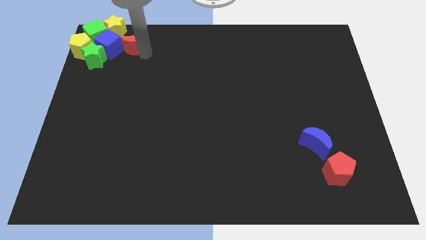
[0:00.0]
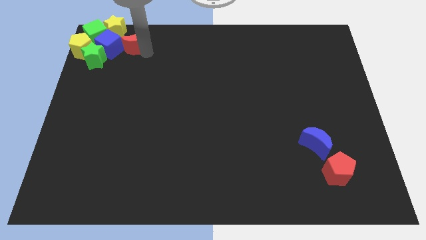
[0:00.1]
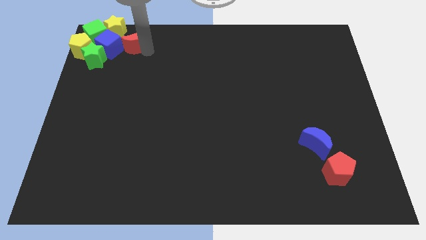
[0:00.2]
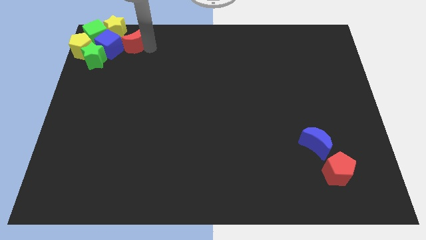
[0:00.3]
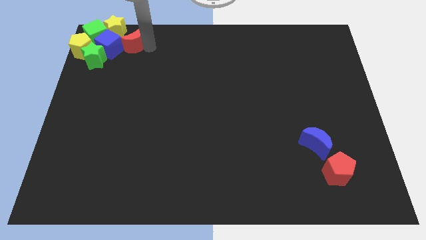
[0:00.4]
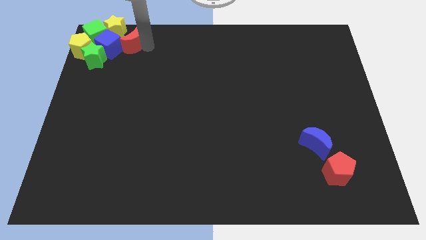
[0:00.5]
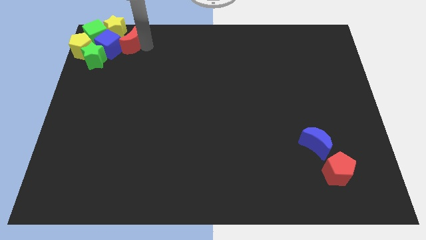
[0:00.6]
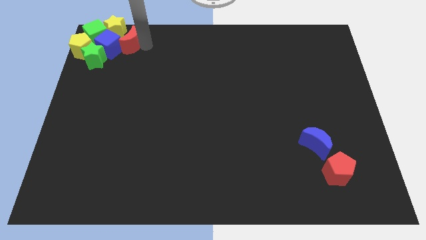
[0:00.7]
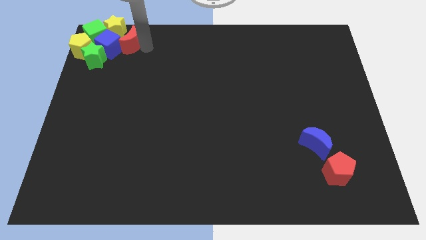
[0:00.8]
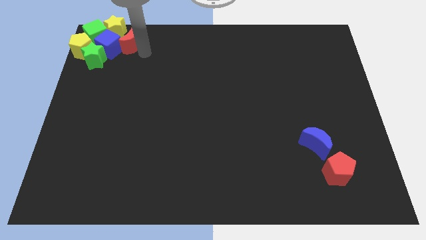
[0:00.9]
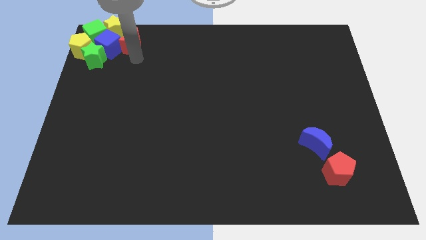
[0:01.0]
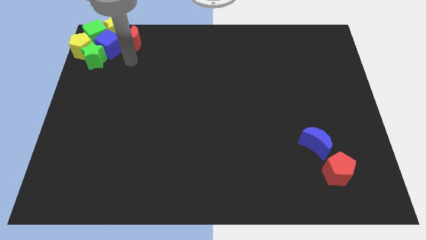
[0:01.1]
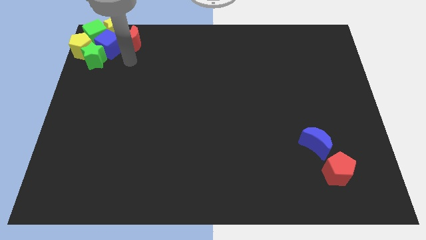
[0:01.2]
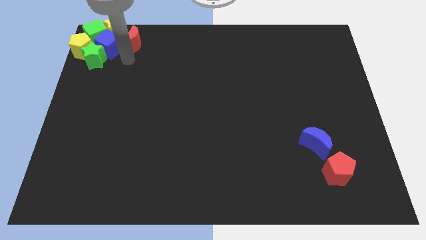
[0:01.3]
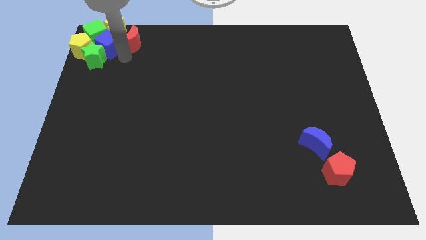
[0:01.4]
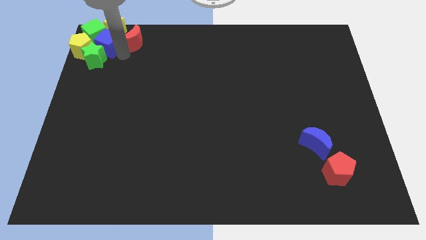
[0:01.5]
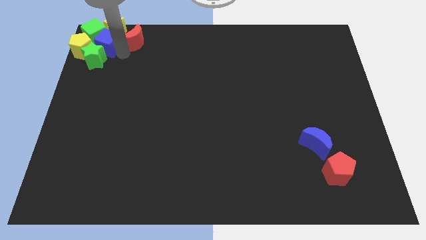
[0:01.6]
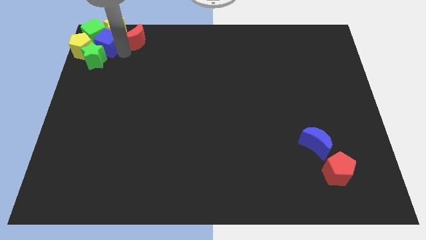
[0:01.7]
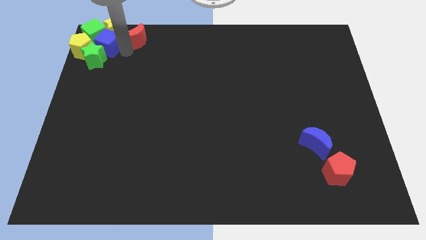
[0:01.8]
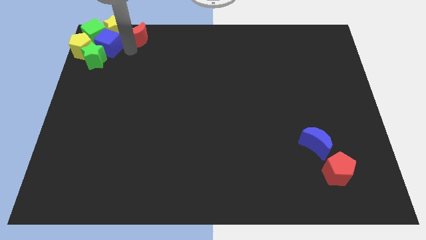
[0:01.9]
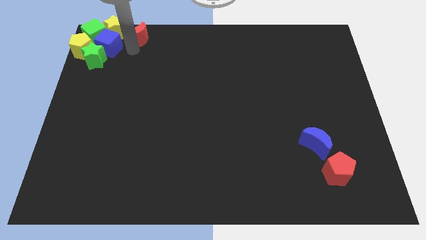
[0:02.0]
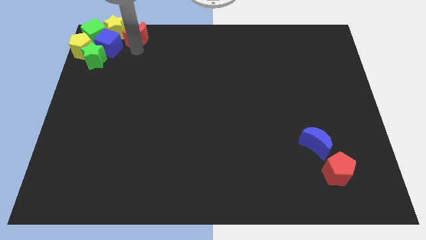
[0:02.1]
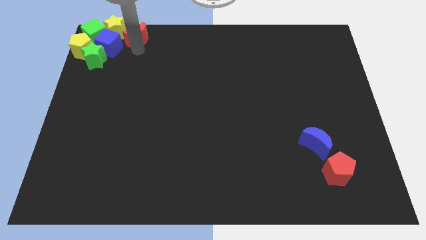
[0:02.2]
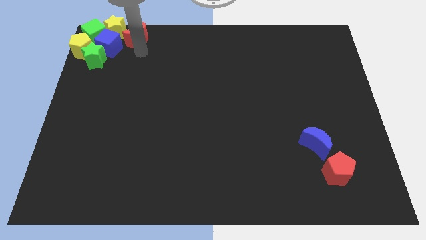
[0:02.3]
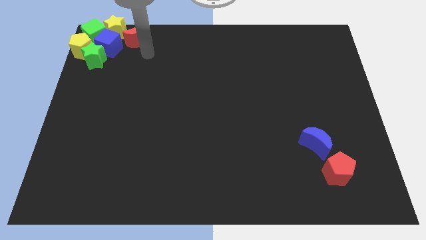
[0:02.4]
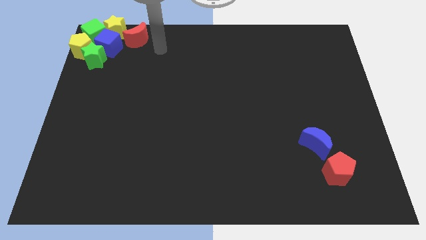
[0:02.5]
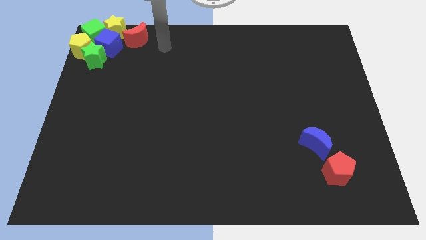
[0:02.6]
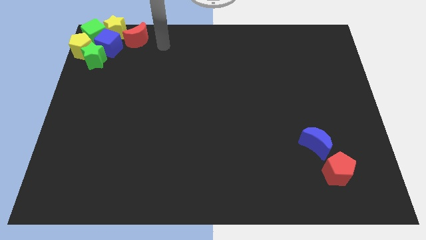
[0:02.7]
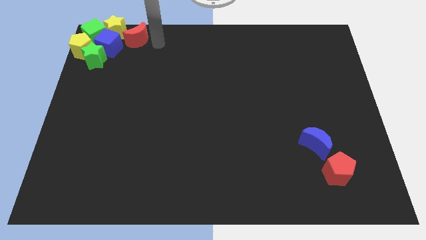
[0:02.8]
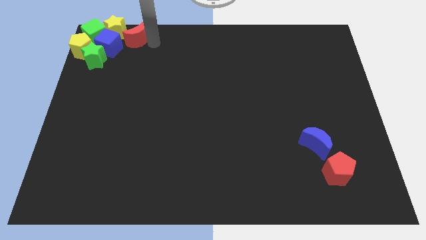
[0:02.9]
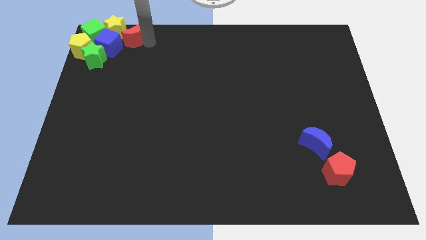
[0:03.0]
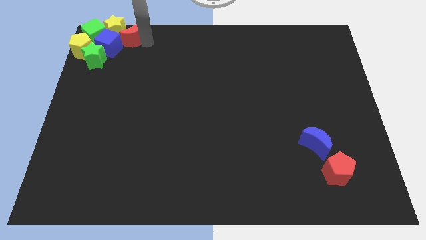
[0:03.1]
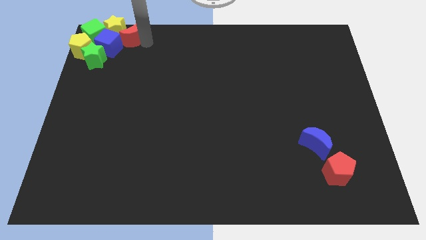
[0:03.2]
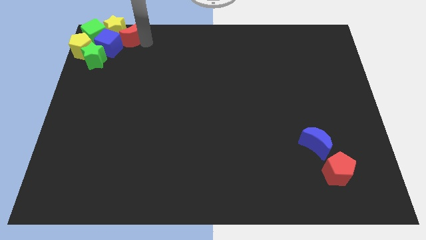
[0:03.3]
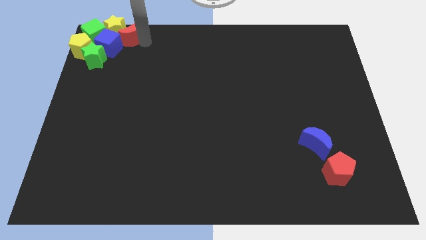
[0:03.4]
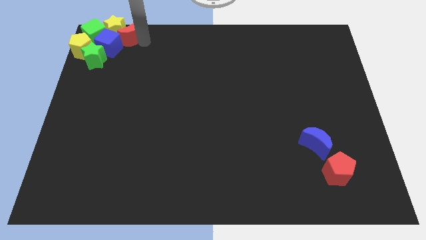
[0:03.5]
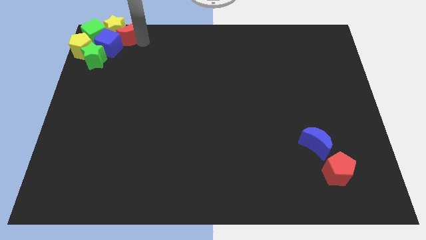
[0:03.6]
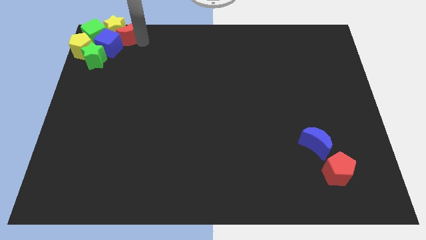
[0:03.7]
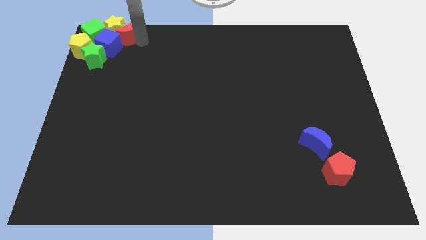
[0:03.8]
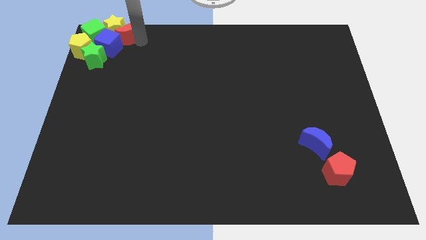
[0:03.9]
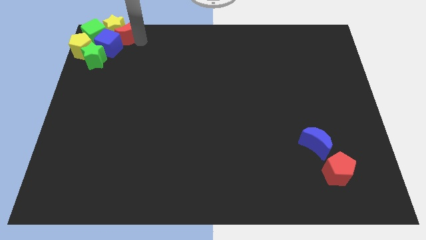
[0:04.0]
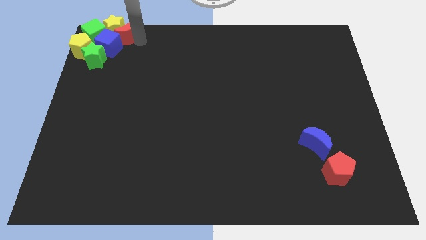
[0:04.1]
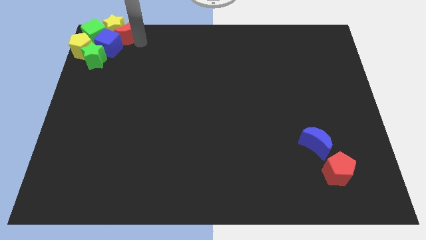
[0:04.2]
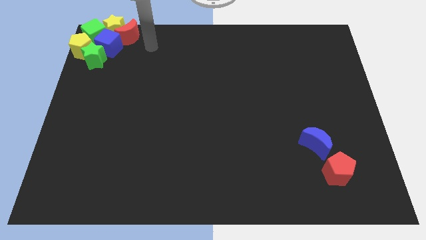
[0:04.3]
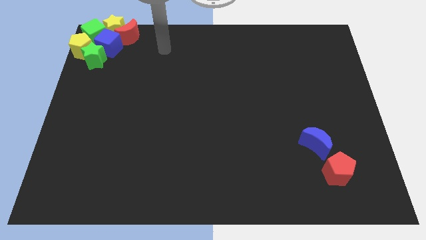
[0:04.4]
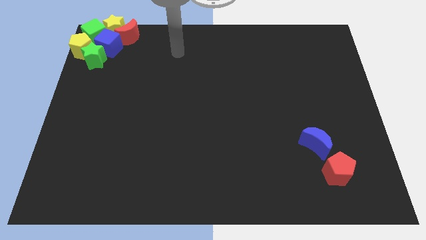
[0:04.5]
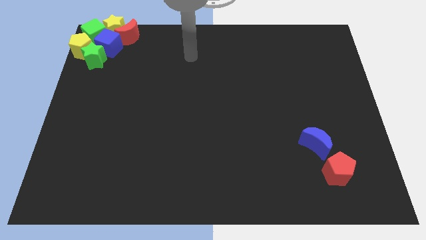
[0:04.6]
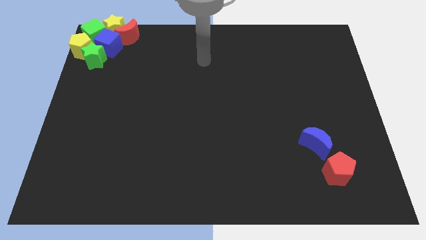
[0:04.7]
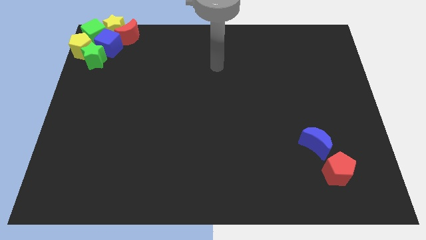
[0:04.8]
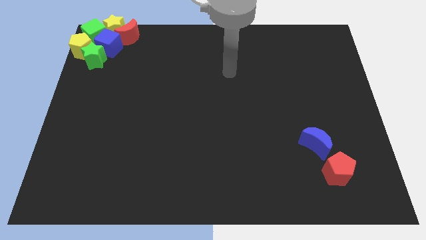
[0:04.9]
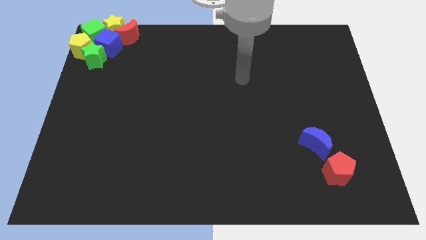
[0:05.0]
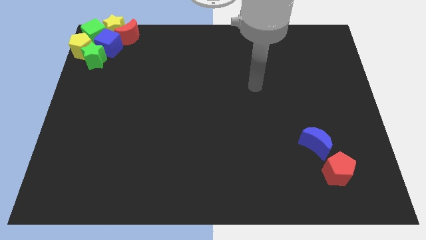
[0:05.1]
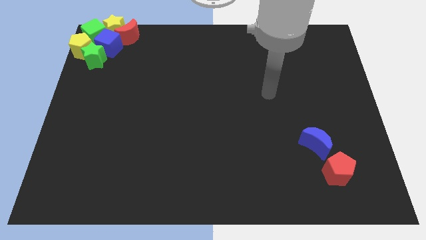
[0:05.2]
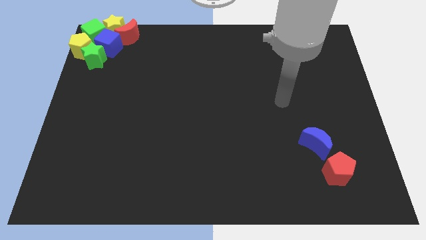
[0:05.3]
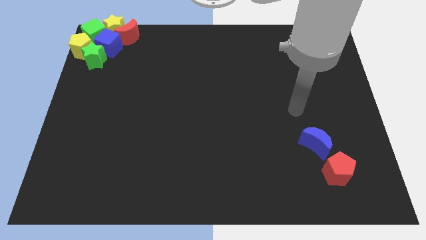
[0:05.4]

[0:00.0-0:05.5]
push the red crescent to the bottom of the yellow star

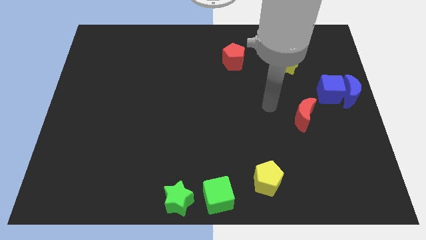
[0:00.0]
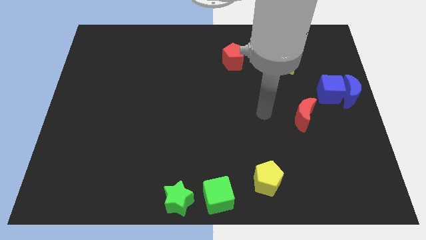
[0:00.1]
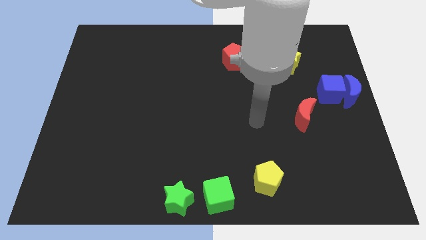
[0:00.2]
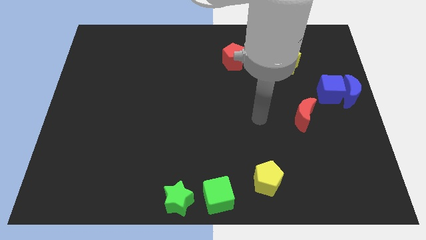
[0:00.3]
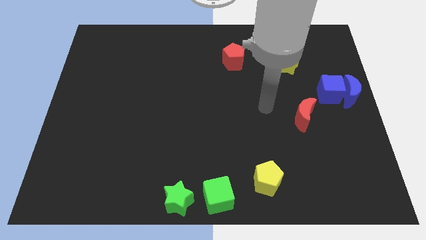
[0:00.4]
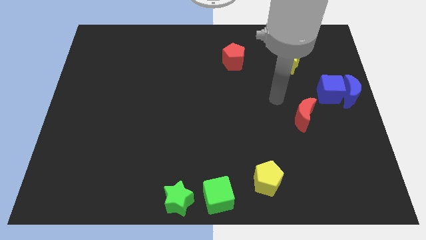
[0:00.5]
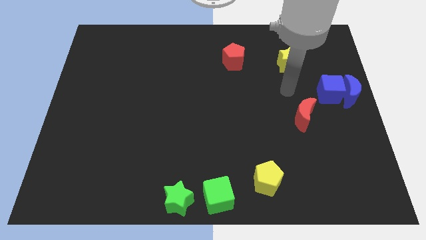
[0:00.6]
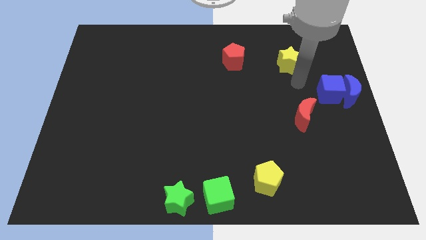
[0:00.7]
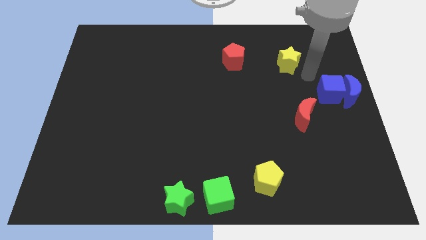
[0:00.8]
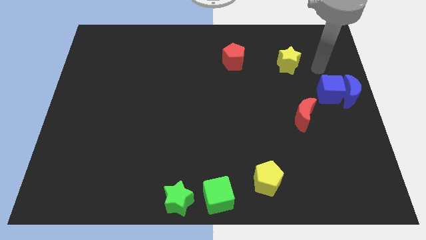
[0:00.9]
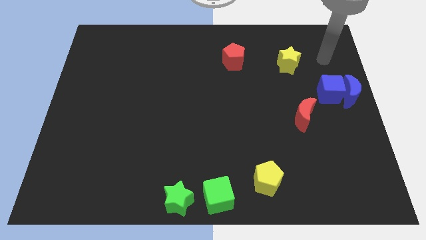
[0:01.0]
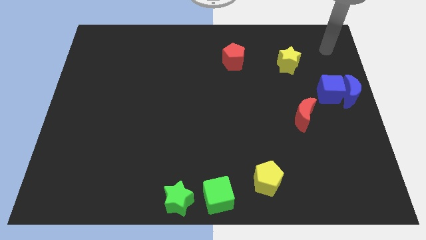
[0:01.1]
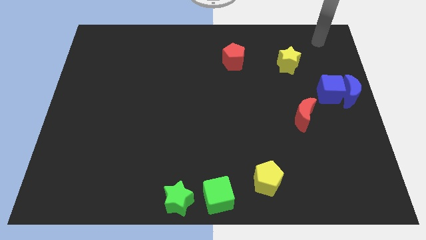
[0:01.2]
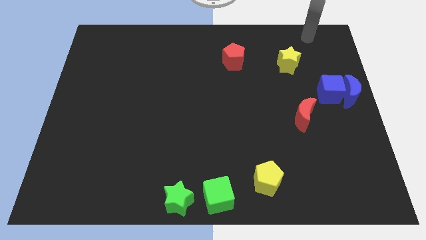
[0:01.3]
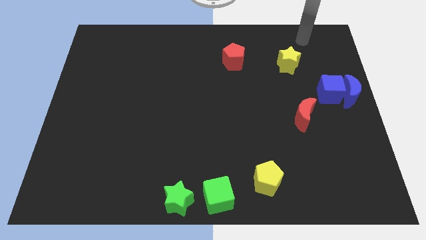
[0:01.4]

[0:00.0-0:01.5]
move your arm to the top right of the board

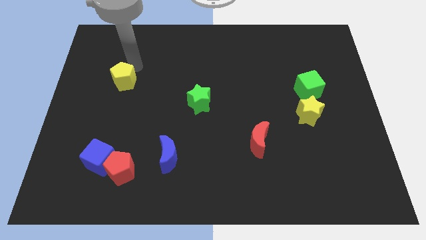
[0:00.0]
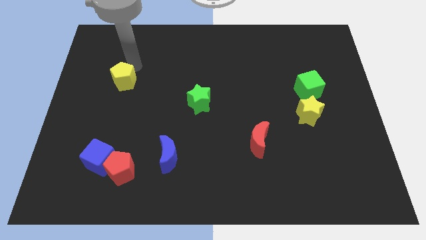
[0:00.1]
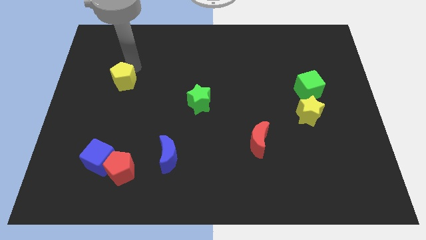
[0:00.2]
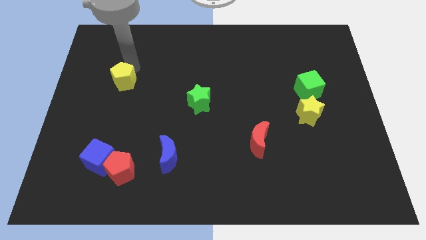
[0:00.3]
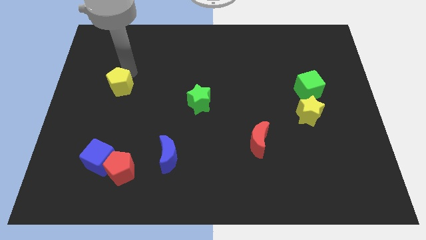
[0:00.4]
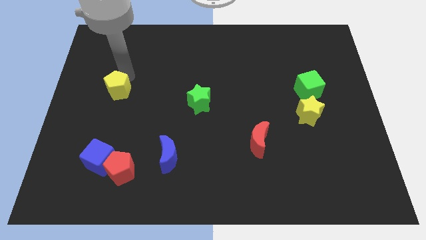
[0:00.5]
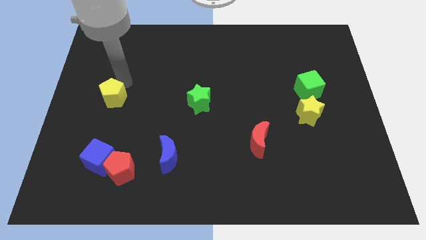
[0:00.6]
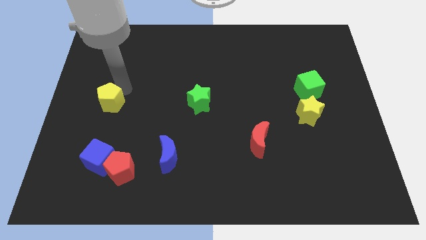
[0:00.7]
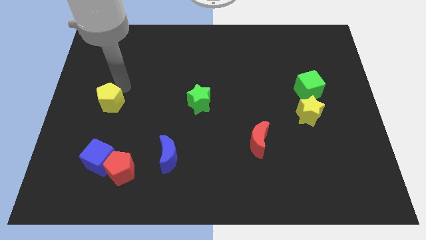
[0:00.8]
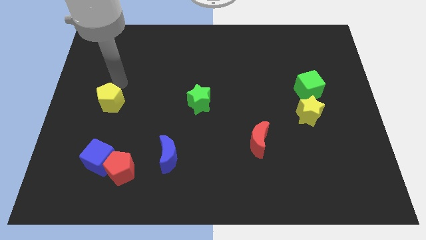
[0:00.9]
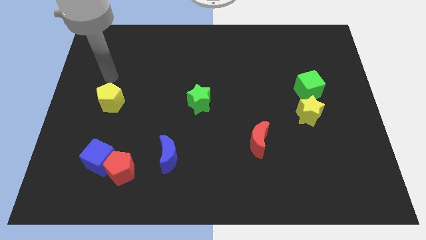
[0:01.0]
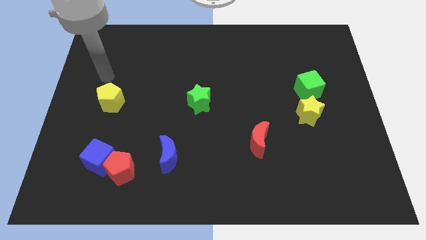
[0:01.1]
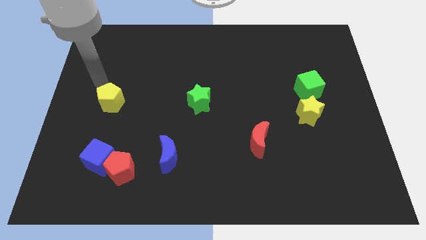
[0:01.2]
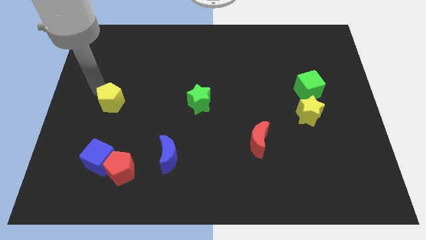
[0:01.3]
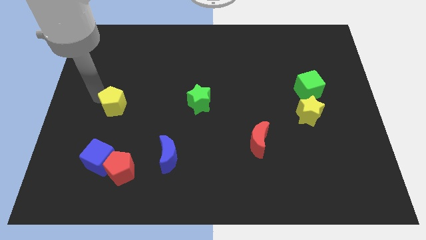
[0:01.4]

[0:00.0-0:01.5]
place the yellow pentagon parallel to the green star

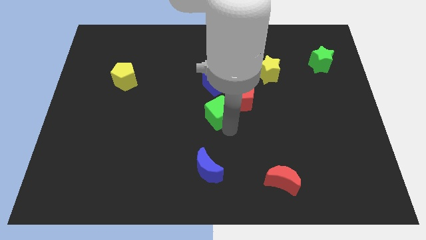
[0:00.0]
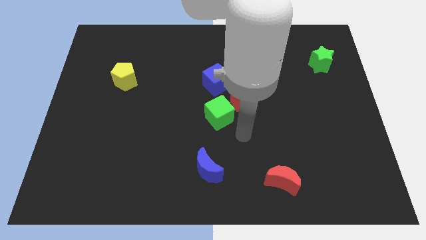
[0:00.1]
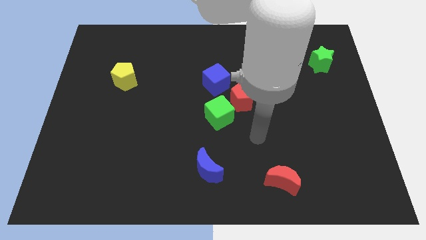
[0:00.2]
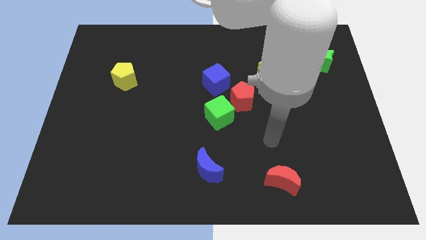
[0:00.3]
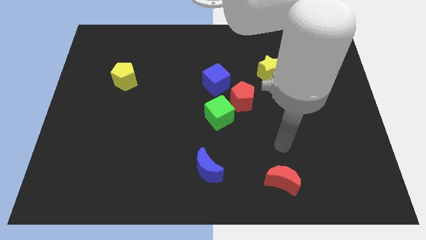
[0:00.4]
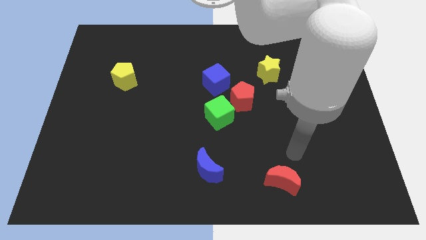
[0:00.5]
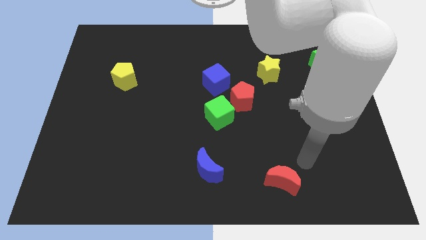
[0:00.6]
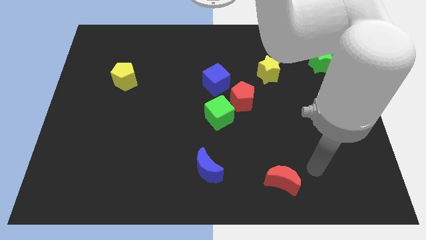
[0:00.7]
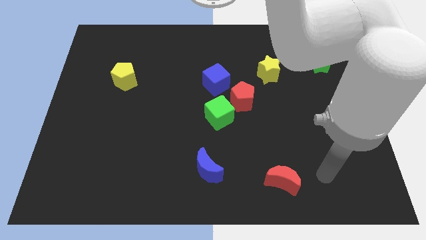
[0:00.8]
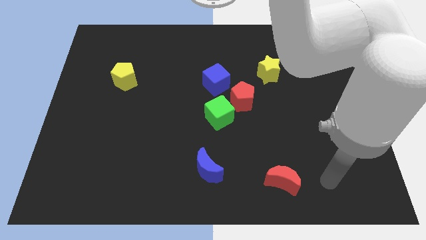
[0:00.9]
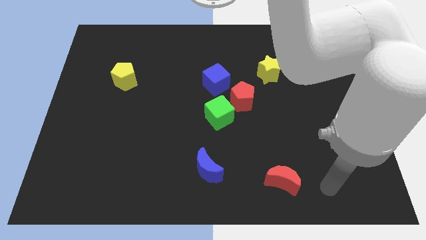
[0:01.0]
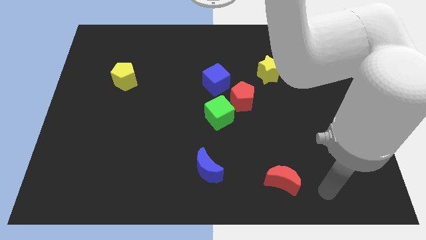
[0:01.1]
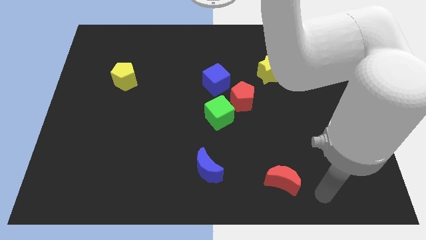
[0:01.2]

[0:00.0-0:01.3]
push your hand away from the green cube
